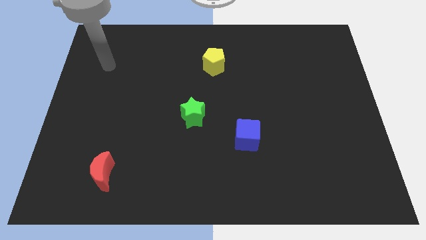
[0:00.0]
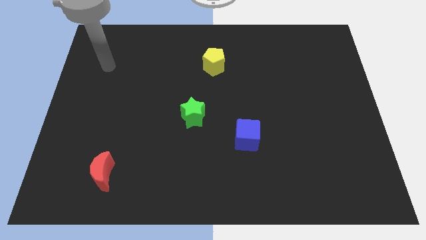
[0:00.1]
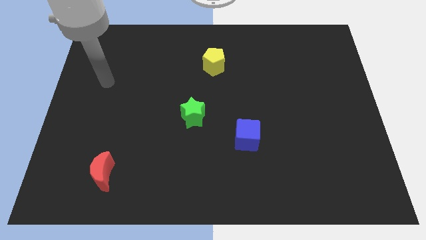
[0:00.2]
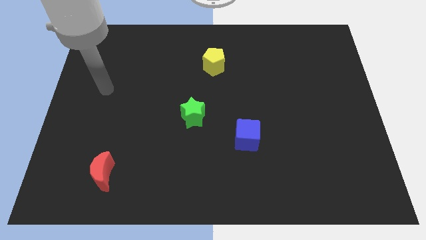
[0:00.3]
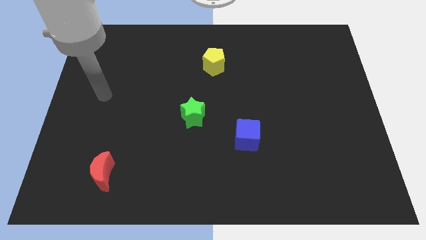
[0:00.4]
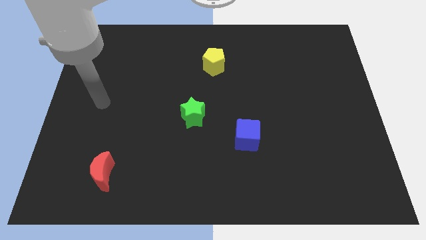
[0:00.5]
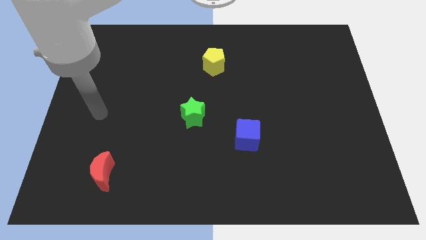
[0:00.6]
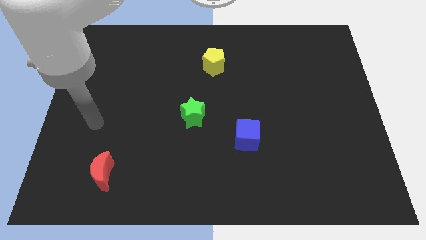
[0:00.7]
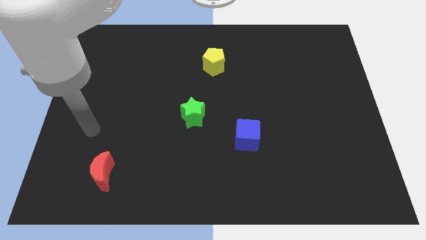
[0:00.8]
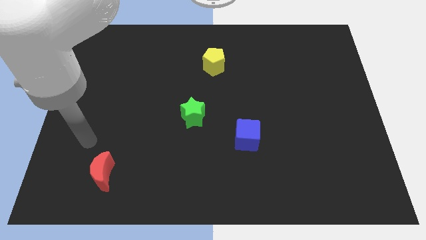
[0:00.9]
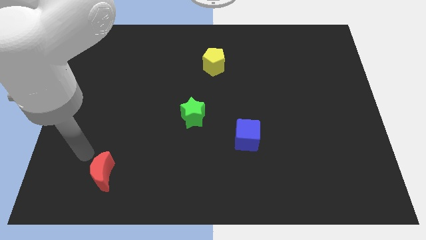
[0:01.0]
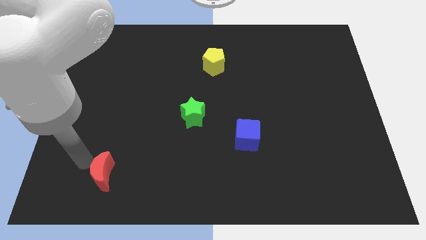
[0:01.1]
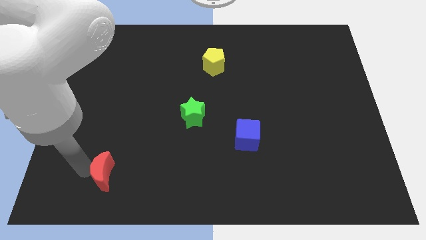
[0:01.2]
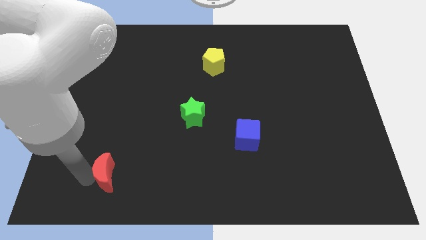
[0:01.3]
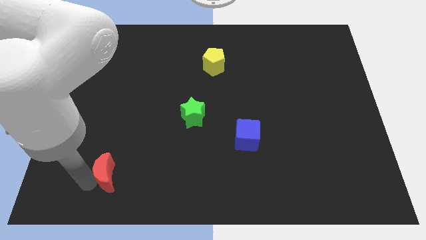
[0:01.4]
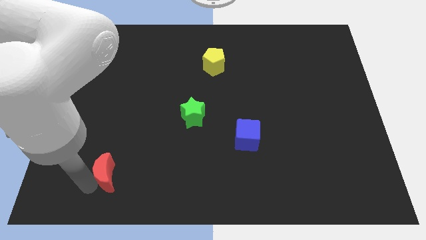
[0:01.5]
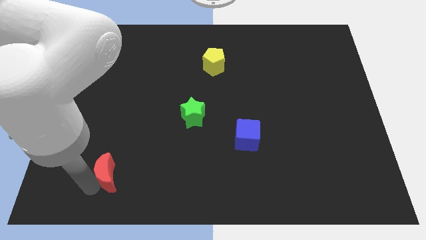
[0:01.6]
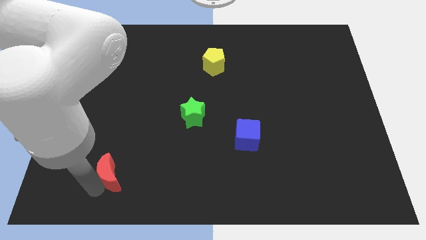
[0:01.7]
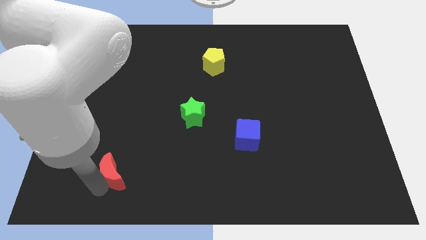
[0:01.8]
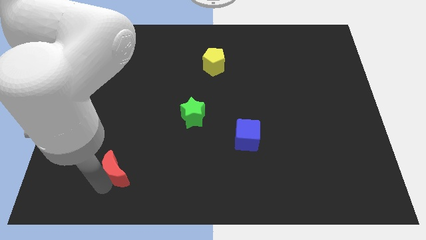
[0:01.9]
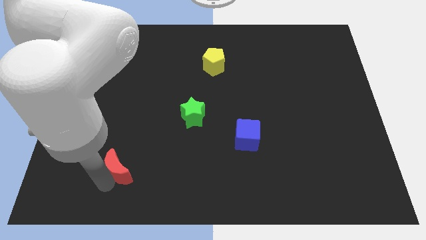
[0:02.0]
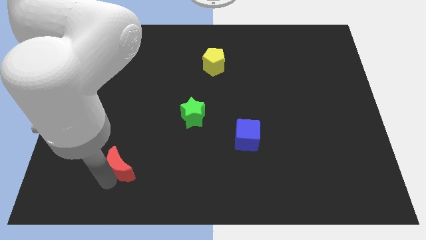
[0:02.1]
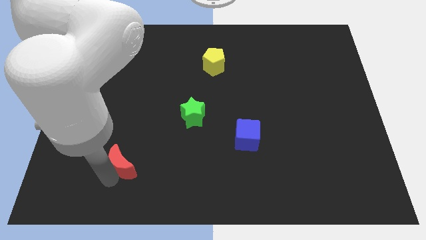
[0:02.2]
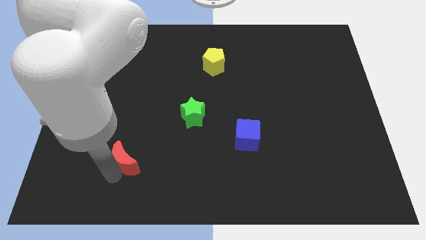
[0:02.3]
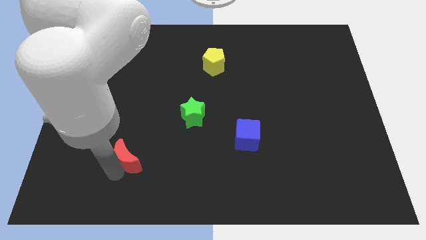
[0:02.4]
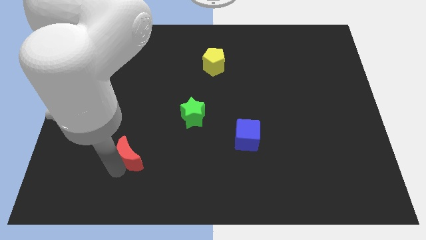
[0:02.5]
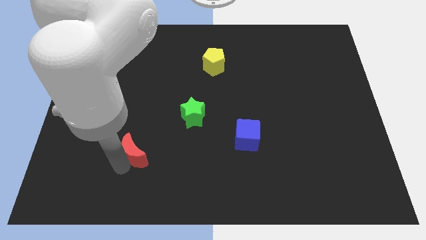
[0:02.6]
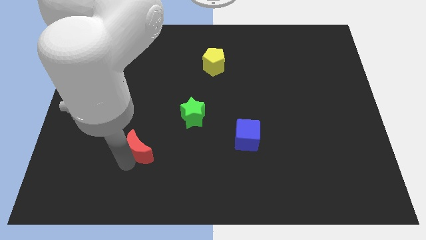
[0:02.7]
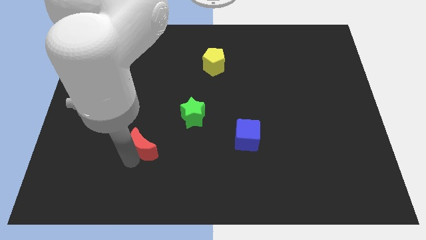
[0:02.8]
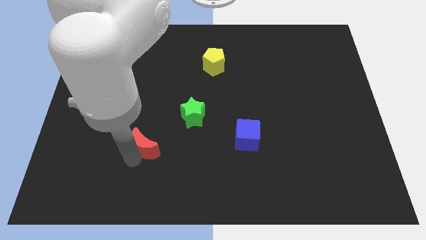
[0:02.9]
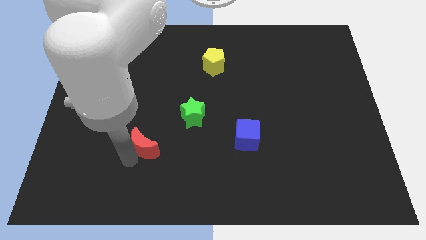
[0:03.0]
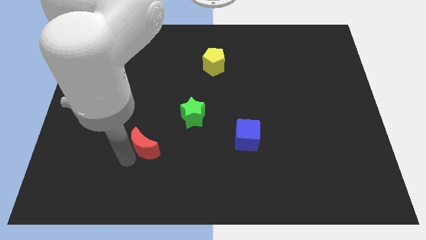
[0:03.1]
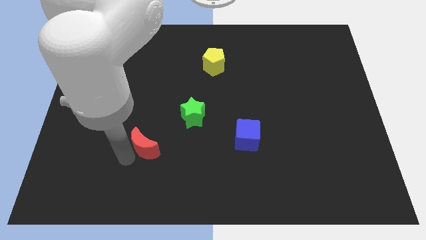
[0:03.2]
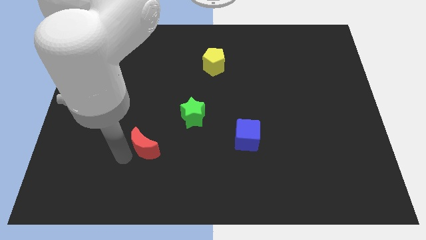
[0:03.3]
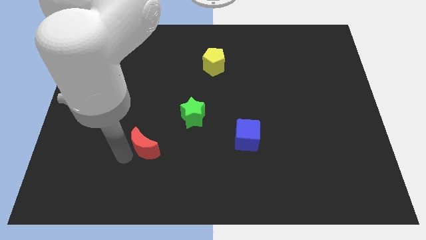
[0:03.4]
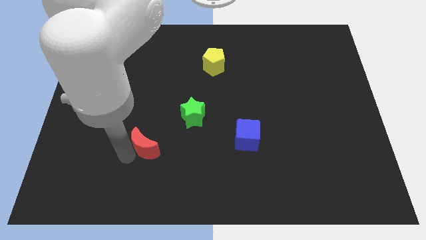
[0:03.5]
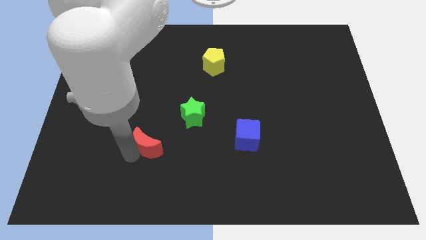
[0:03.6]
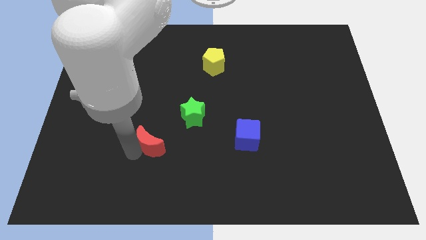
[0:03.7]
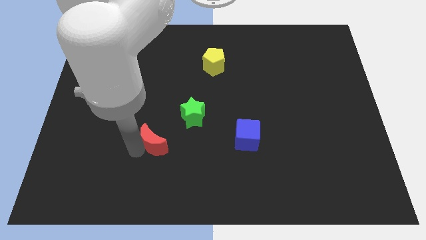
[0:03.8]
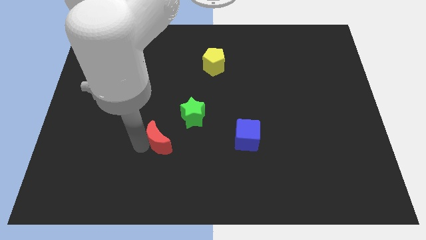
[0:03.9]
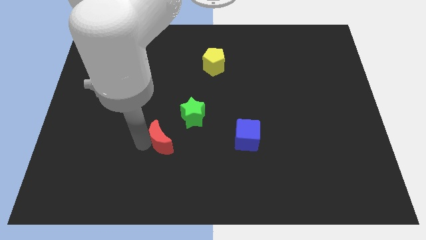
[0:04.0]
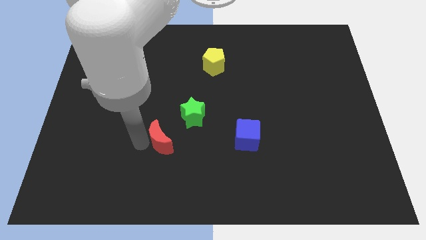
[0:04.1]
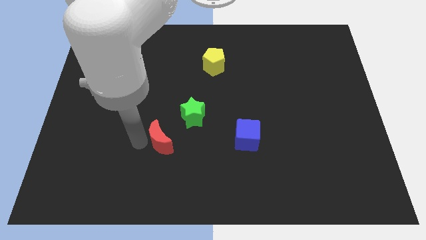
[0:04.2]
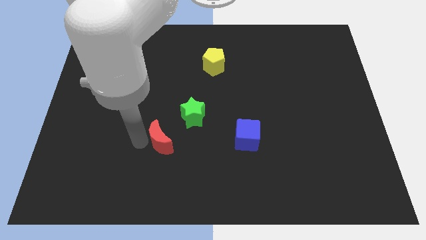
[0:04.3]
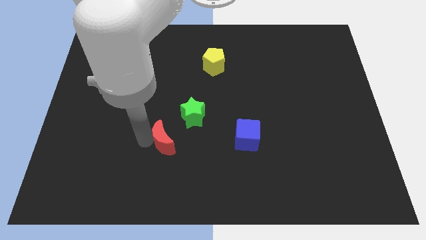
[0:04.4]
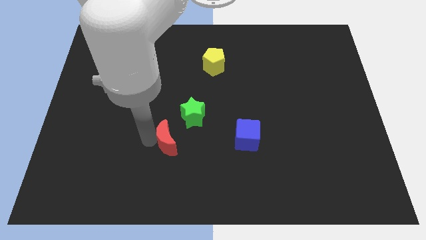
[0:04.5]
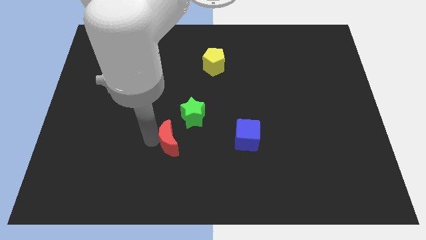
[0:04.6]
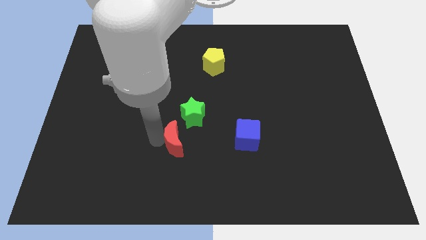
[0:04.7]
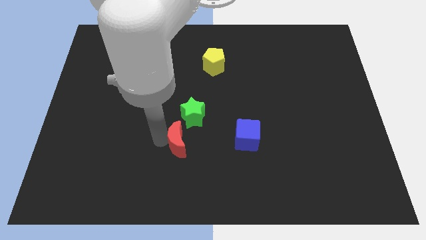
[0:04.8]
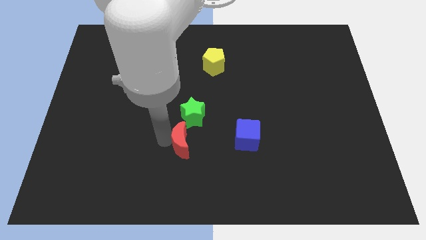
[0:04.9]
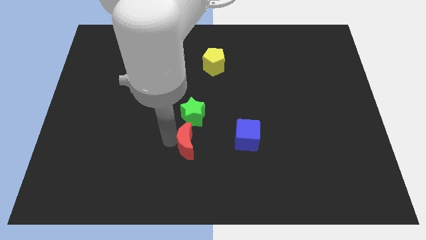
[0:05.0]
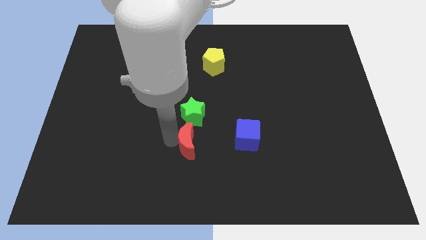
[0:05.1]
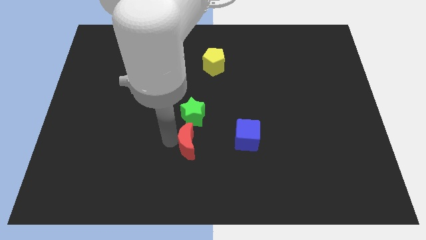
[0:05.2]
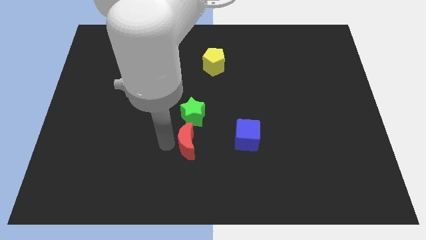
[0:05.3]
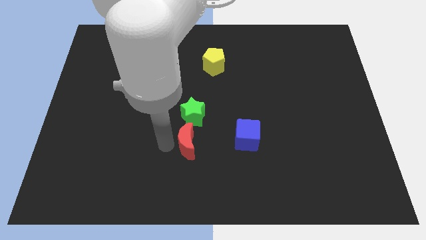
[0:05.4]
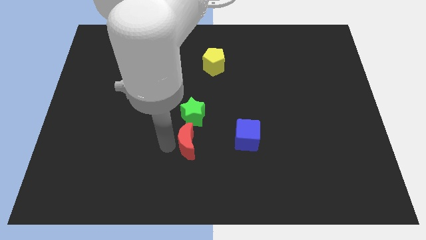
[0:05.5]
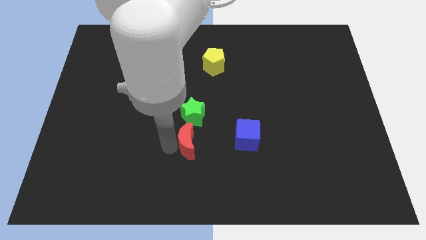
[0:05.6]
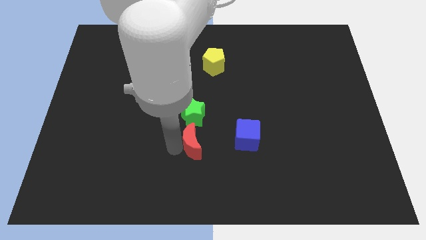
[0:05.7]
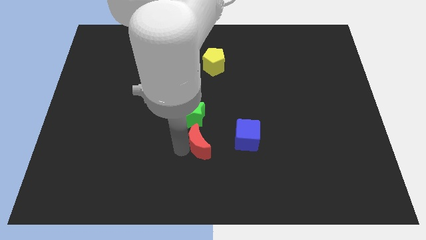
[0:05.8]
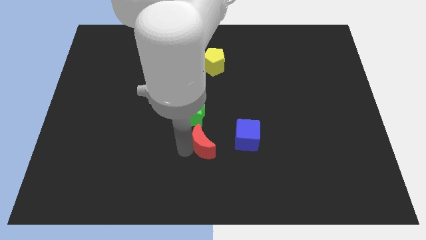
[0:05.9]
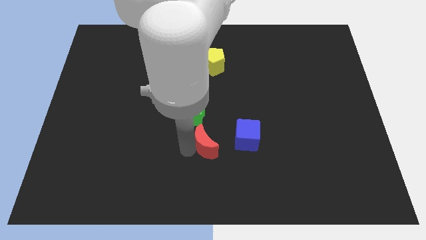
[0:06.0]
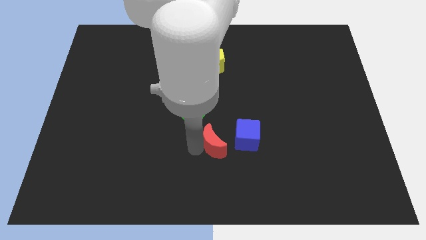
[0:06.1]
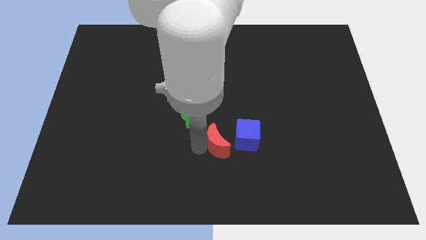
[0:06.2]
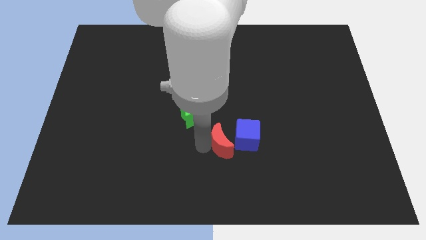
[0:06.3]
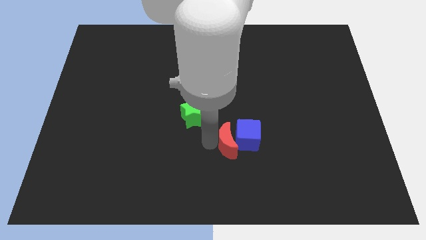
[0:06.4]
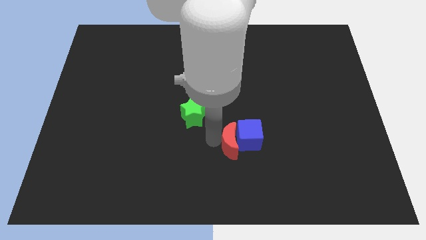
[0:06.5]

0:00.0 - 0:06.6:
move the moon close to the blue cube

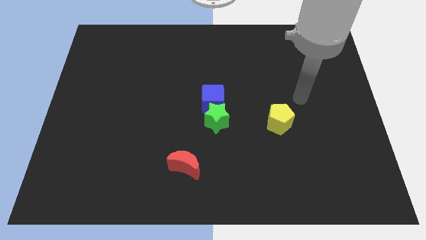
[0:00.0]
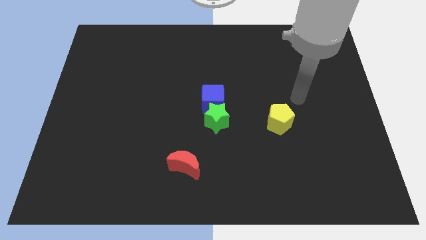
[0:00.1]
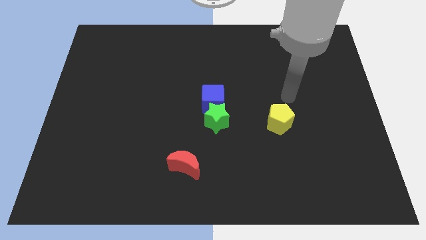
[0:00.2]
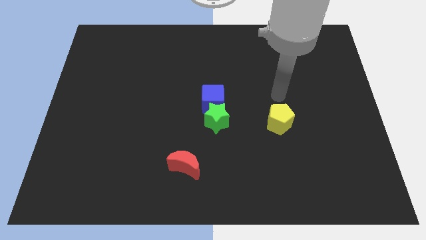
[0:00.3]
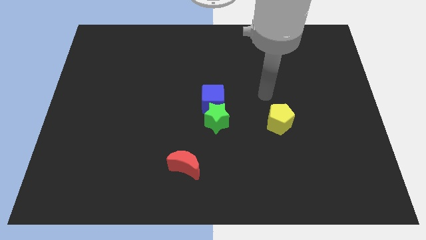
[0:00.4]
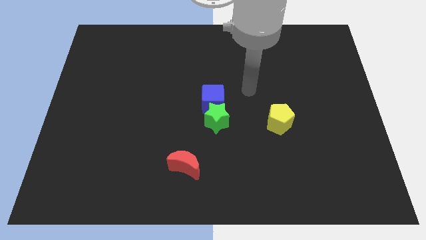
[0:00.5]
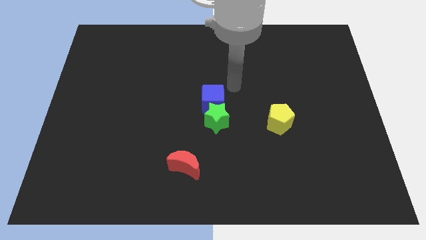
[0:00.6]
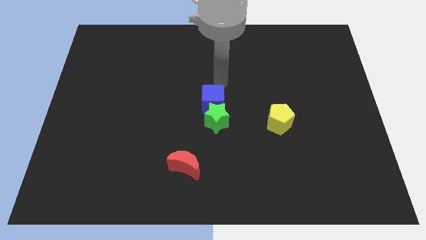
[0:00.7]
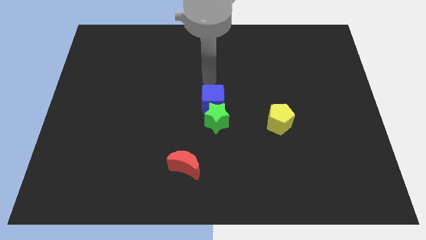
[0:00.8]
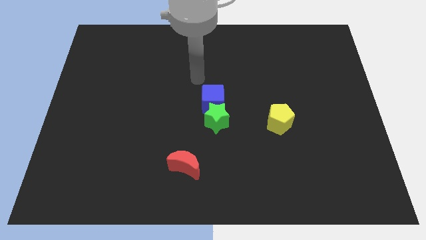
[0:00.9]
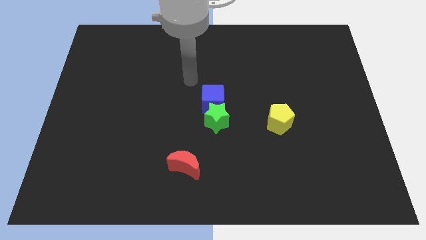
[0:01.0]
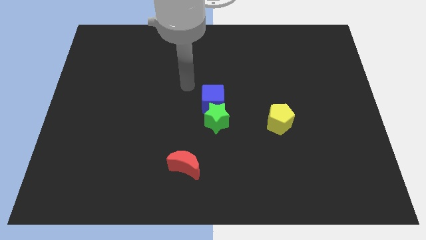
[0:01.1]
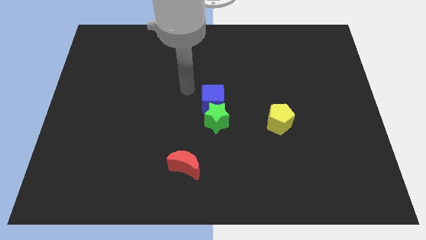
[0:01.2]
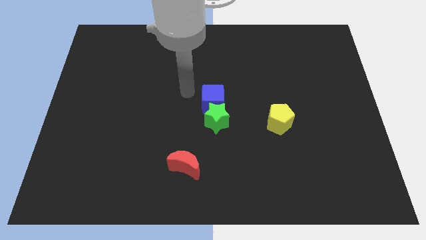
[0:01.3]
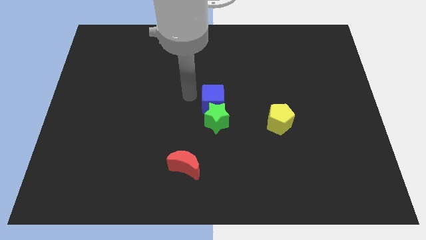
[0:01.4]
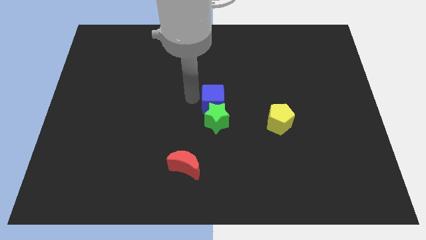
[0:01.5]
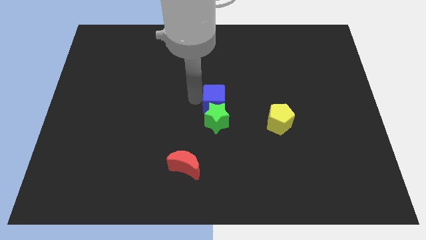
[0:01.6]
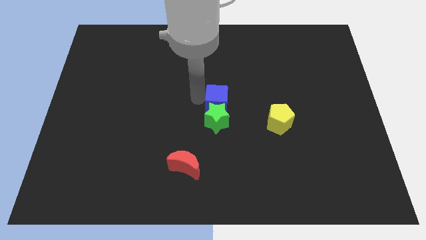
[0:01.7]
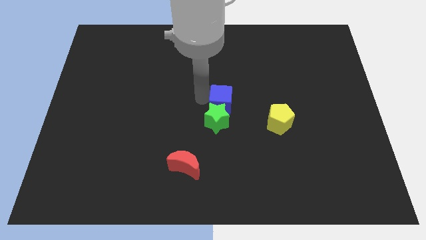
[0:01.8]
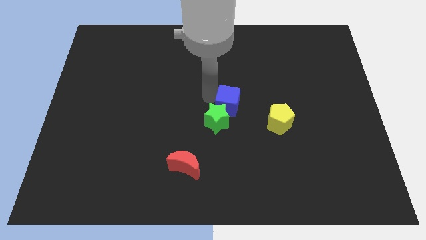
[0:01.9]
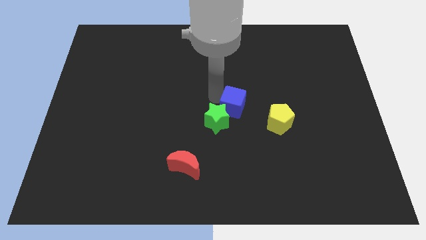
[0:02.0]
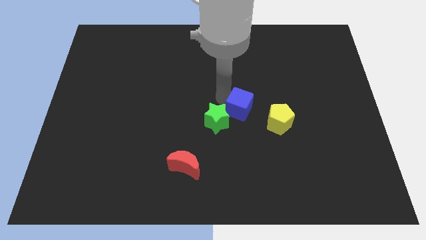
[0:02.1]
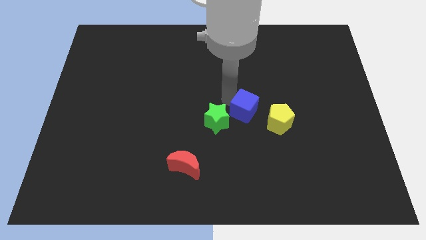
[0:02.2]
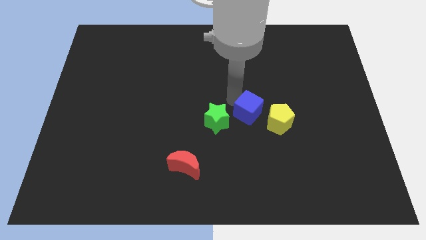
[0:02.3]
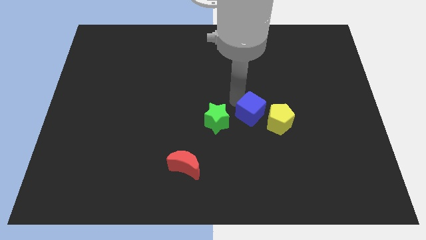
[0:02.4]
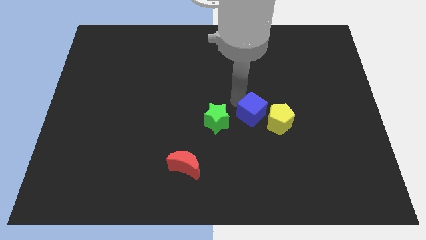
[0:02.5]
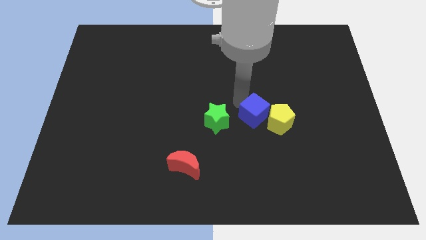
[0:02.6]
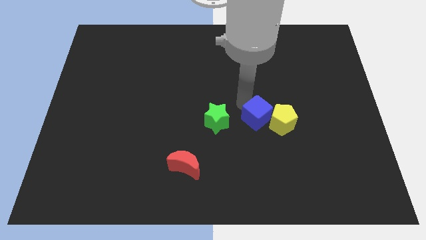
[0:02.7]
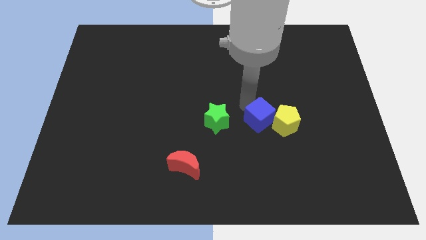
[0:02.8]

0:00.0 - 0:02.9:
slide the blue cube next to the yellow block
